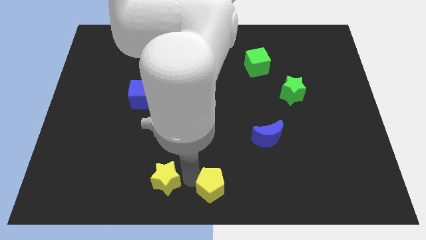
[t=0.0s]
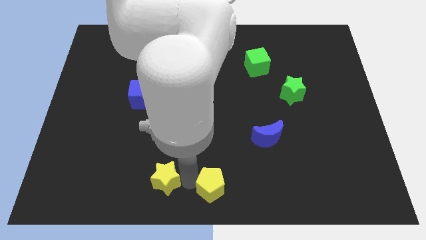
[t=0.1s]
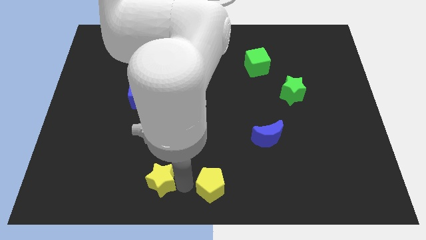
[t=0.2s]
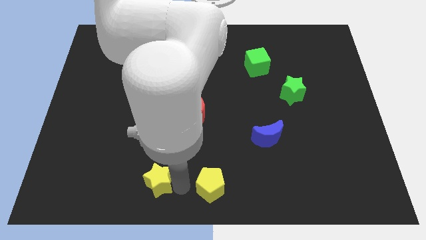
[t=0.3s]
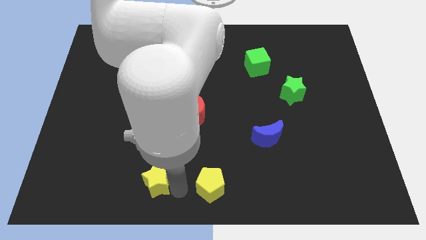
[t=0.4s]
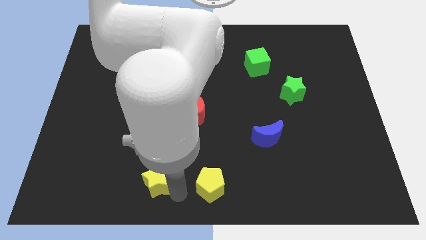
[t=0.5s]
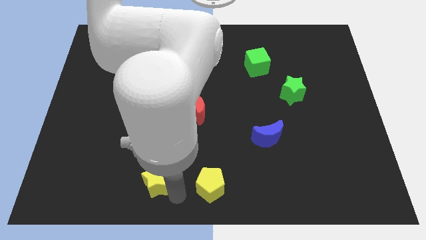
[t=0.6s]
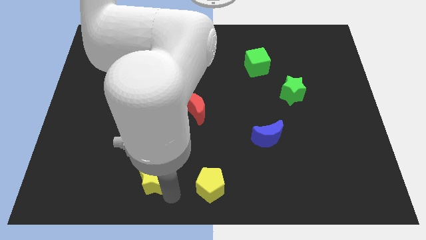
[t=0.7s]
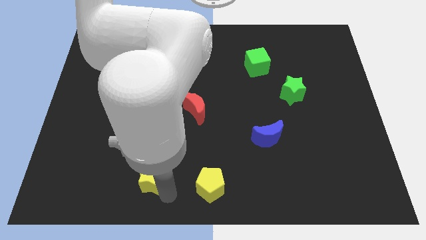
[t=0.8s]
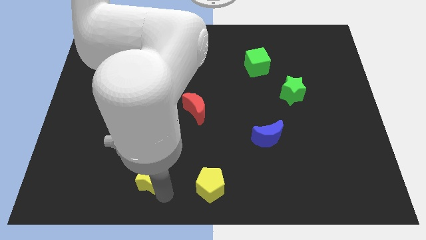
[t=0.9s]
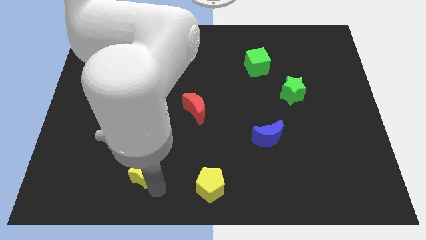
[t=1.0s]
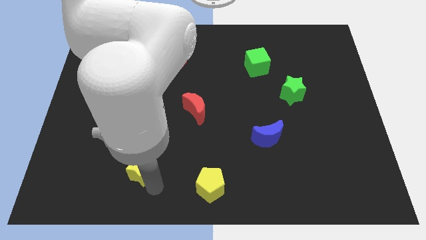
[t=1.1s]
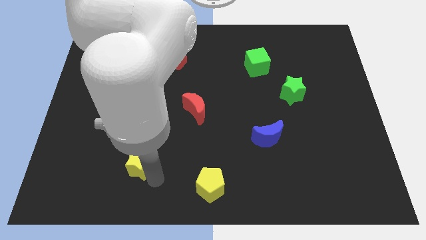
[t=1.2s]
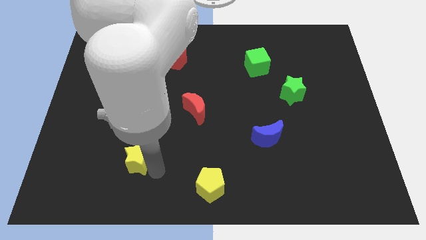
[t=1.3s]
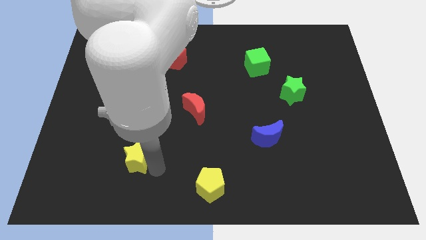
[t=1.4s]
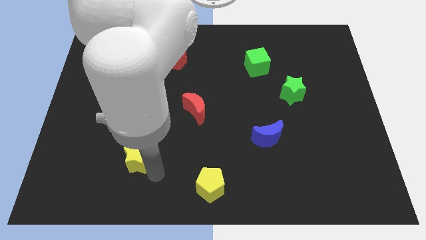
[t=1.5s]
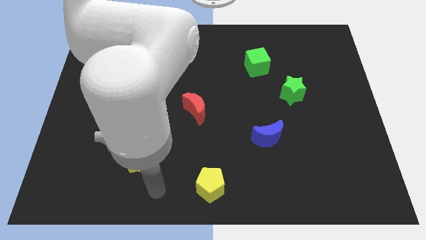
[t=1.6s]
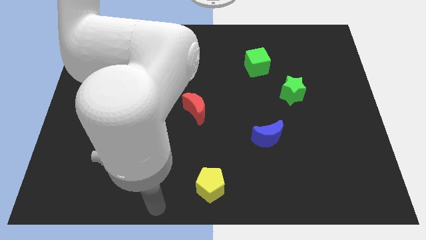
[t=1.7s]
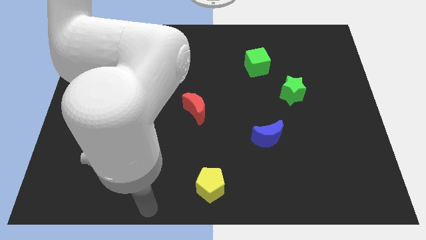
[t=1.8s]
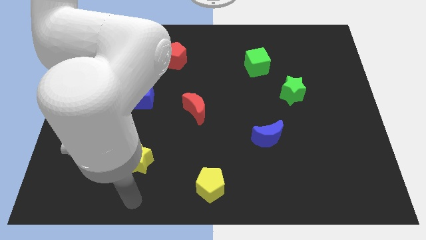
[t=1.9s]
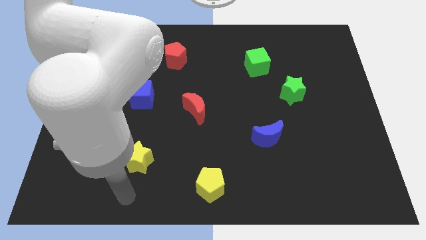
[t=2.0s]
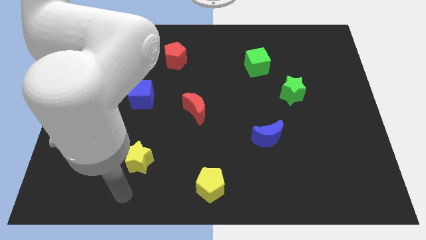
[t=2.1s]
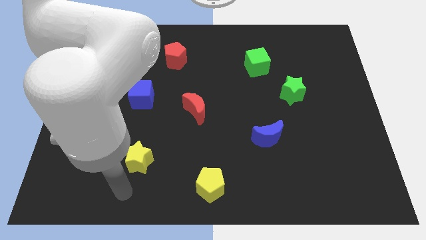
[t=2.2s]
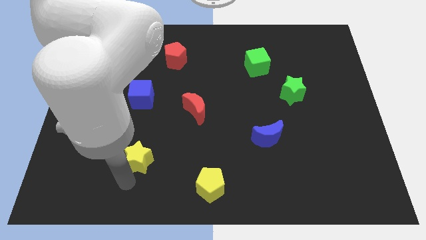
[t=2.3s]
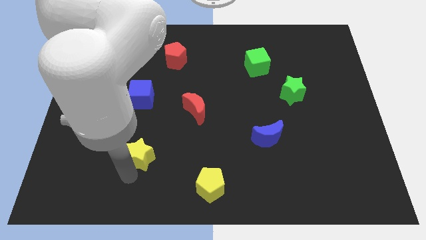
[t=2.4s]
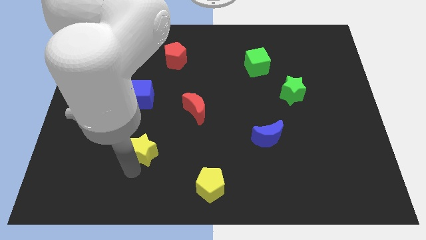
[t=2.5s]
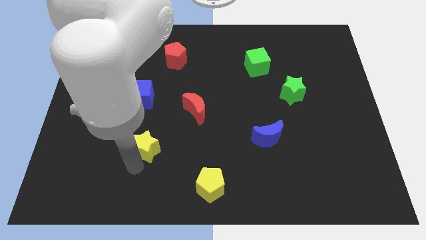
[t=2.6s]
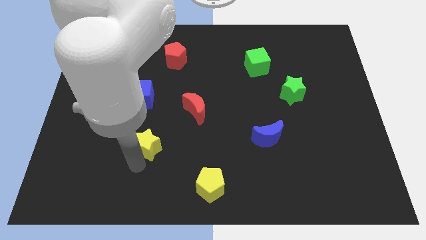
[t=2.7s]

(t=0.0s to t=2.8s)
push the yellow star towards the top side

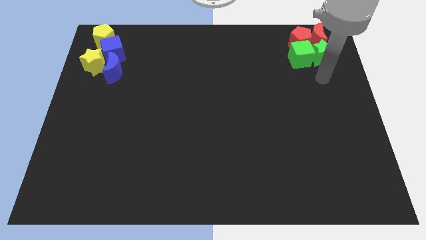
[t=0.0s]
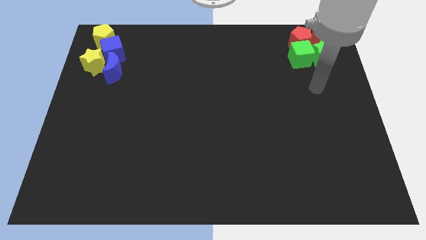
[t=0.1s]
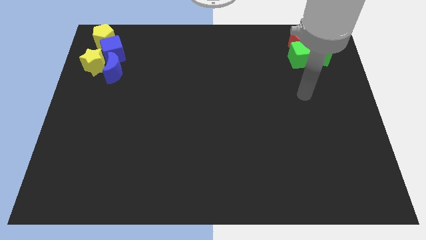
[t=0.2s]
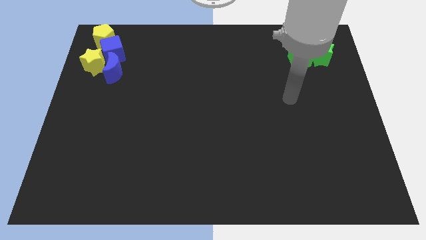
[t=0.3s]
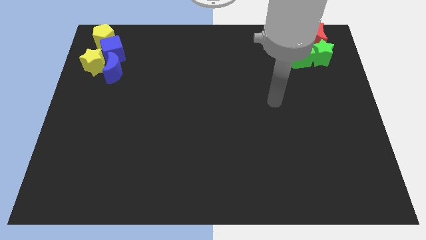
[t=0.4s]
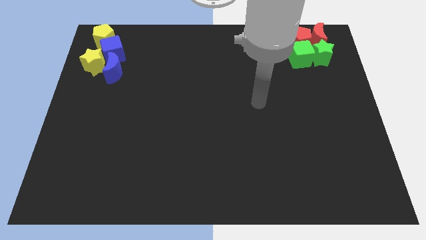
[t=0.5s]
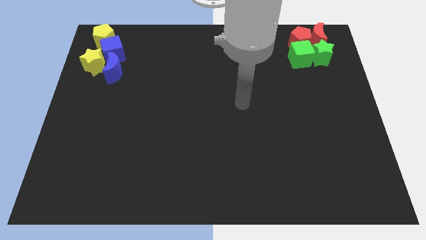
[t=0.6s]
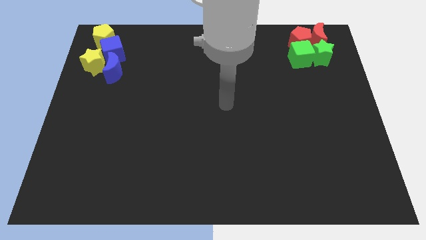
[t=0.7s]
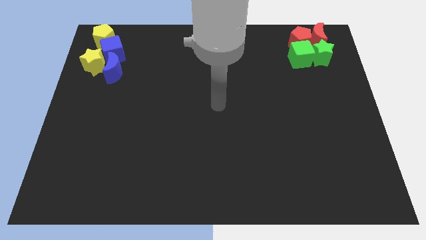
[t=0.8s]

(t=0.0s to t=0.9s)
move the arm towards the left

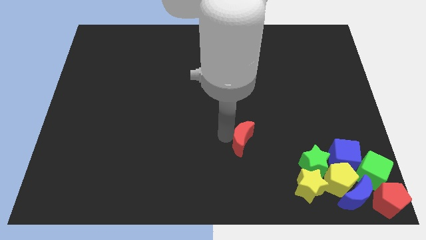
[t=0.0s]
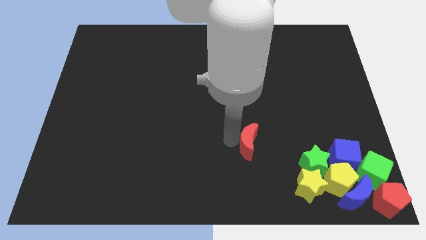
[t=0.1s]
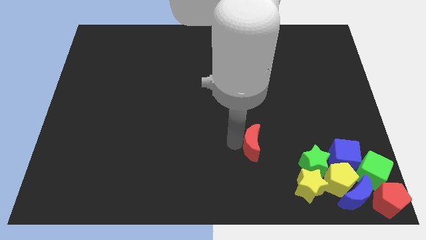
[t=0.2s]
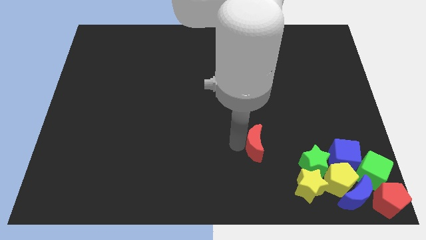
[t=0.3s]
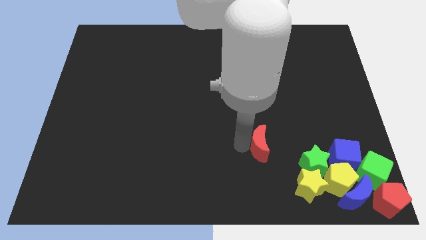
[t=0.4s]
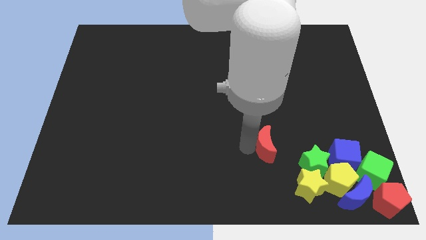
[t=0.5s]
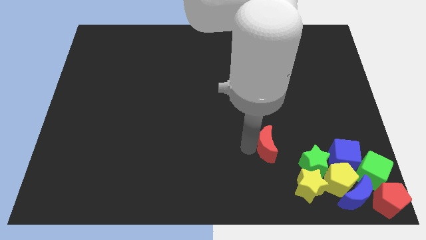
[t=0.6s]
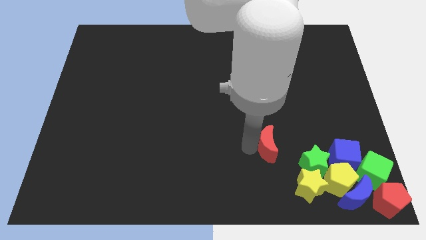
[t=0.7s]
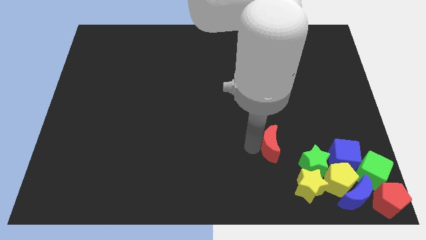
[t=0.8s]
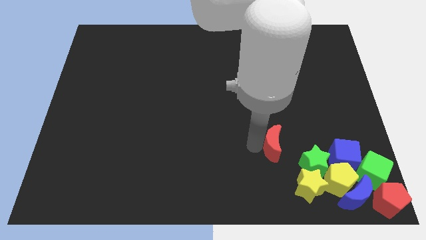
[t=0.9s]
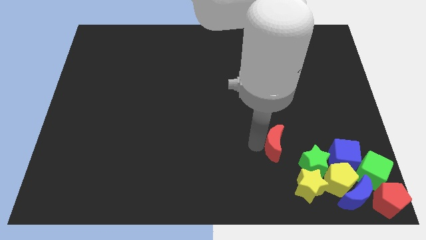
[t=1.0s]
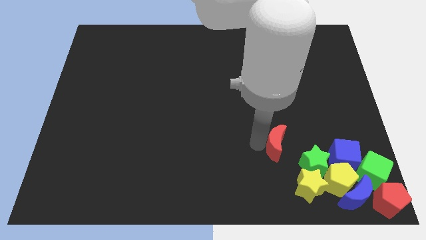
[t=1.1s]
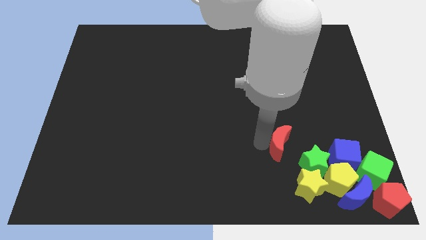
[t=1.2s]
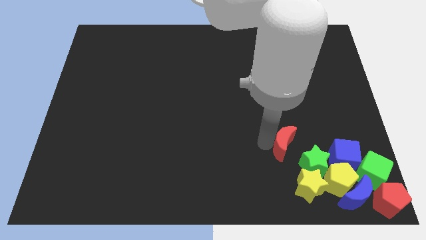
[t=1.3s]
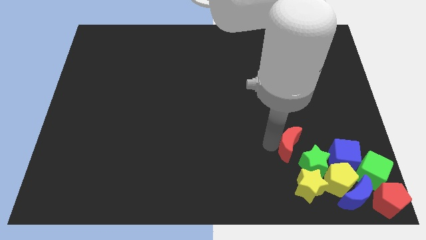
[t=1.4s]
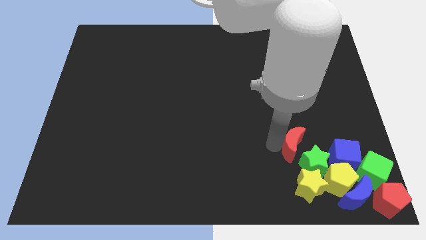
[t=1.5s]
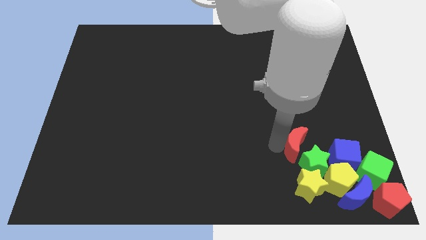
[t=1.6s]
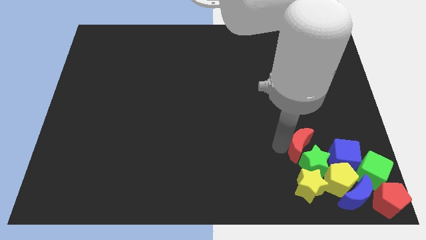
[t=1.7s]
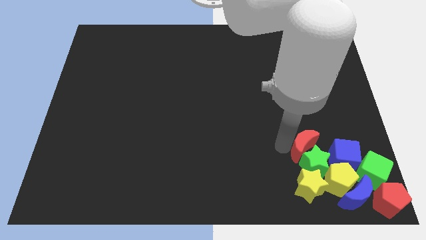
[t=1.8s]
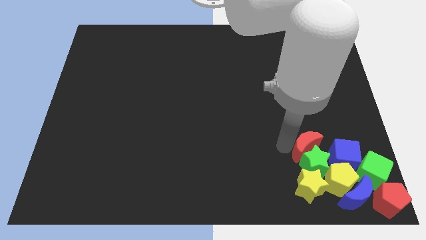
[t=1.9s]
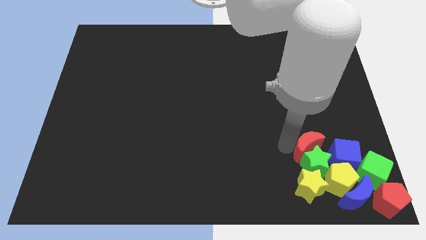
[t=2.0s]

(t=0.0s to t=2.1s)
move the red crescent to the top of the green star

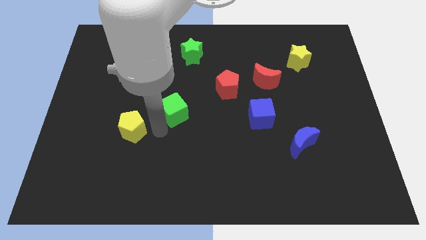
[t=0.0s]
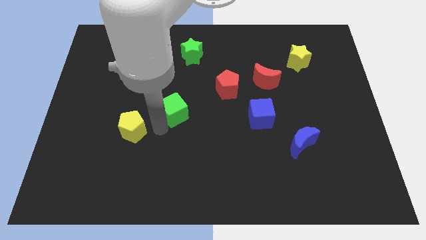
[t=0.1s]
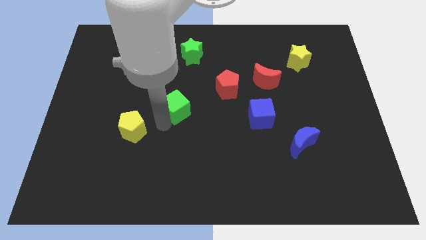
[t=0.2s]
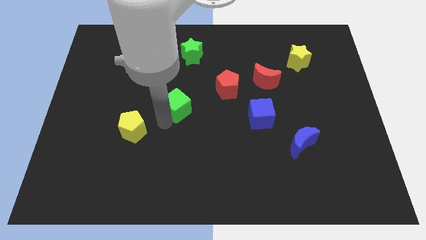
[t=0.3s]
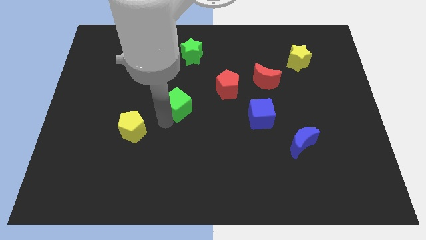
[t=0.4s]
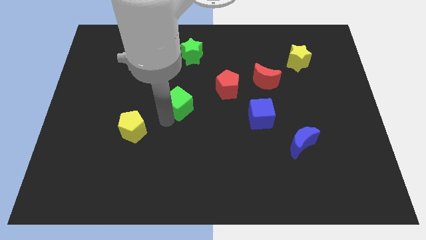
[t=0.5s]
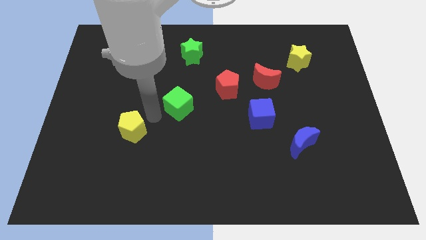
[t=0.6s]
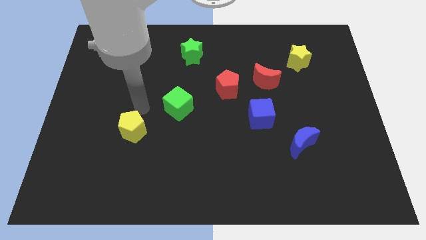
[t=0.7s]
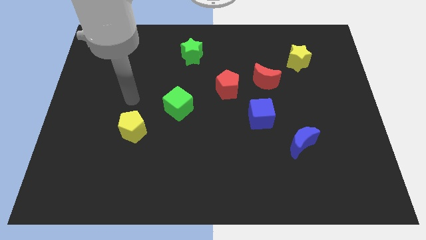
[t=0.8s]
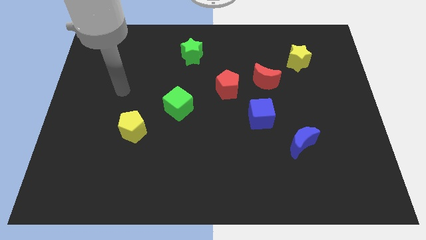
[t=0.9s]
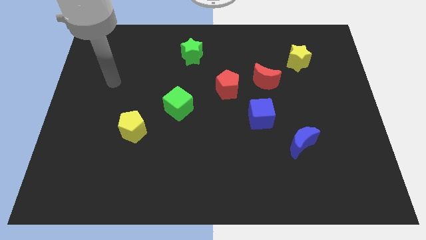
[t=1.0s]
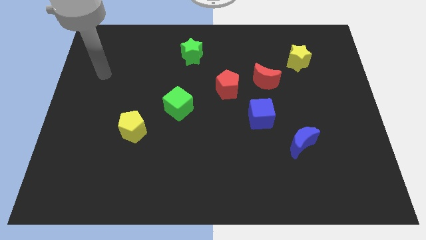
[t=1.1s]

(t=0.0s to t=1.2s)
move the green cube slightly towards the red pentagon

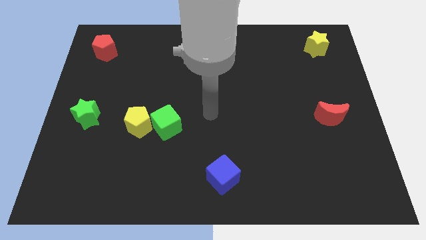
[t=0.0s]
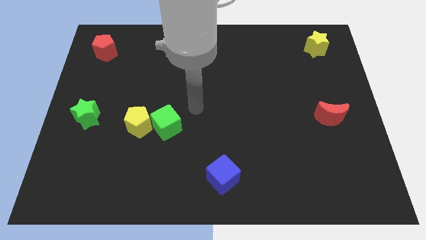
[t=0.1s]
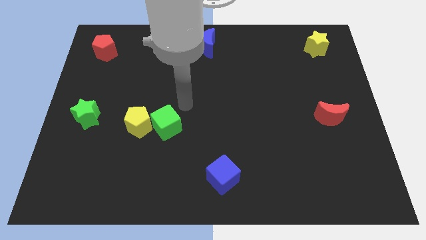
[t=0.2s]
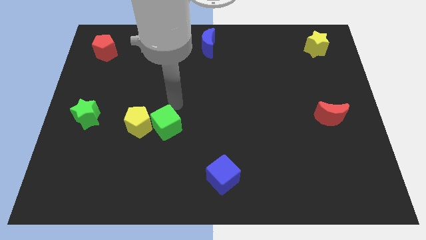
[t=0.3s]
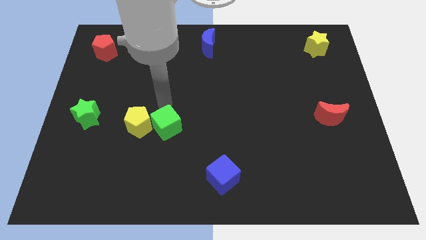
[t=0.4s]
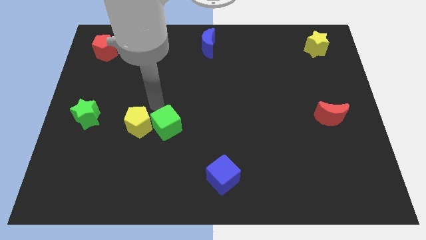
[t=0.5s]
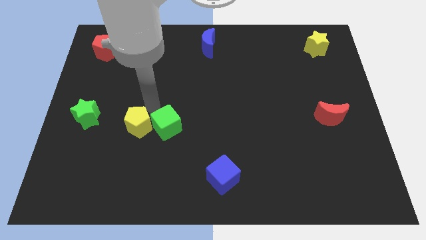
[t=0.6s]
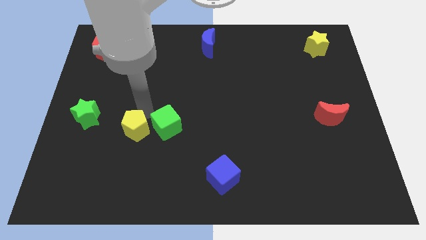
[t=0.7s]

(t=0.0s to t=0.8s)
move your arm towards the yellow pentagon

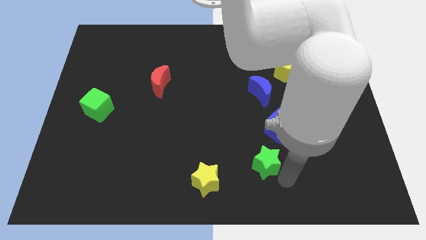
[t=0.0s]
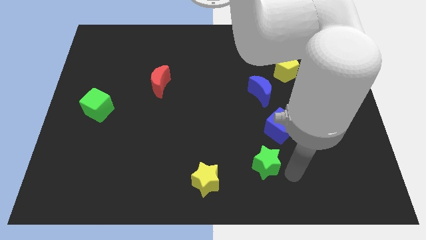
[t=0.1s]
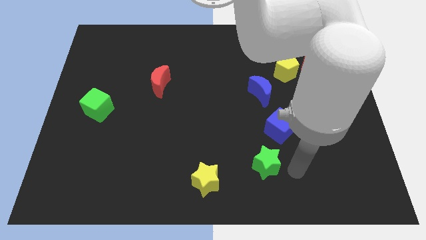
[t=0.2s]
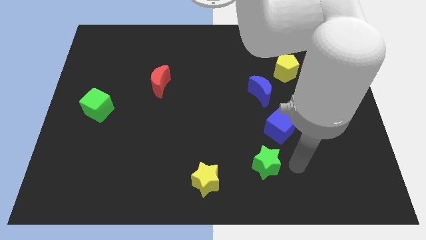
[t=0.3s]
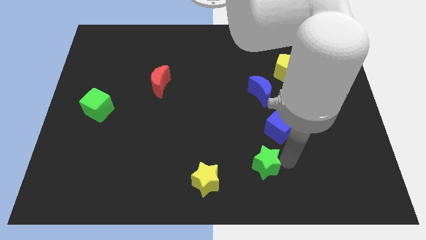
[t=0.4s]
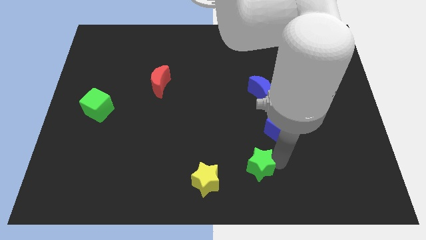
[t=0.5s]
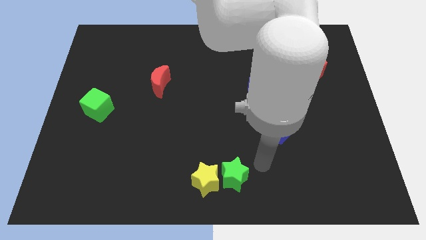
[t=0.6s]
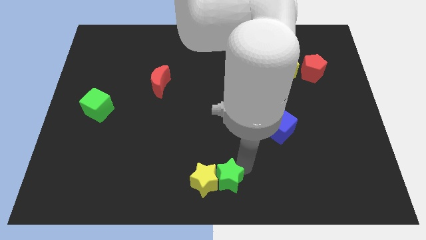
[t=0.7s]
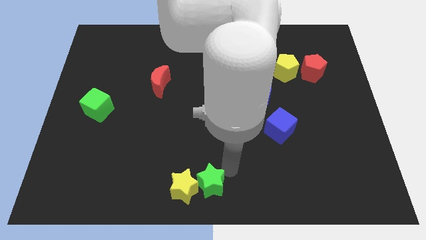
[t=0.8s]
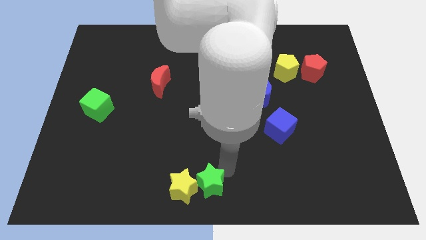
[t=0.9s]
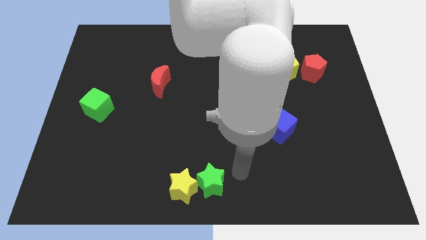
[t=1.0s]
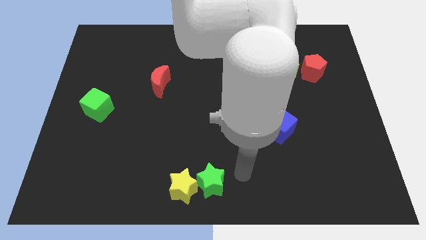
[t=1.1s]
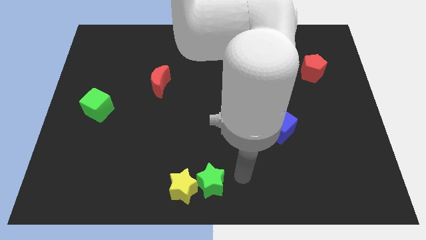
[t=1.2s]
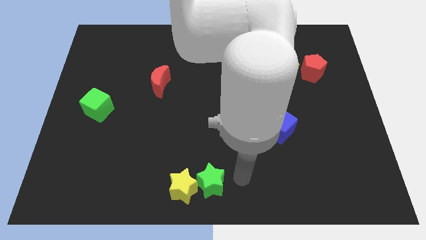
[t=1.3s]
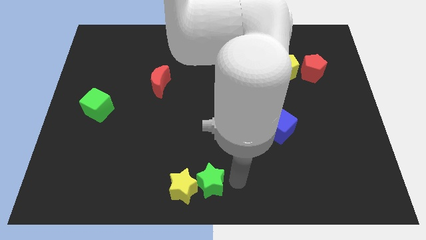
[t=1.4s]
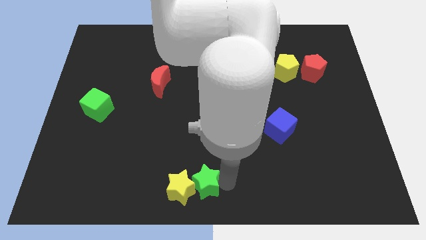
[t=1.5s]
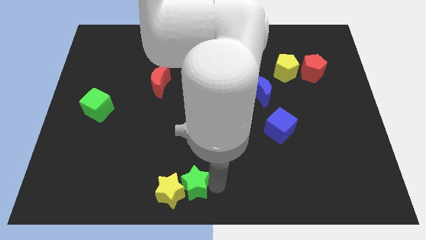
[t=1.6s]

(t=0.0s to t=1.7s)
push the green star into the yellow star
